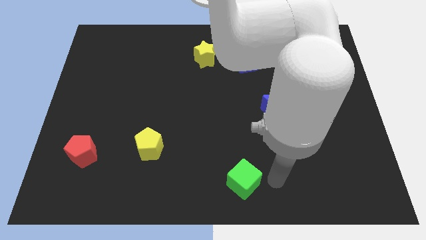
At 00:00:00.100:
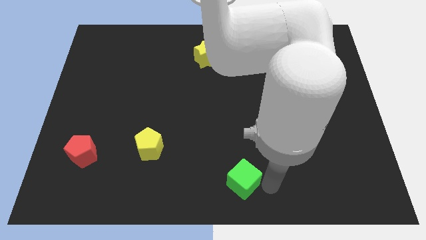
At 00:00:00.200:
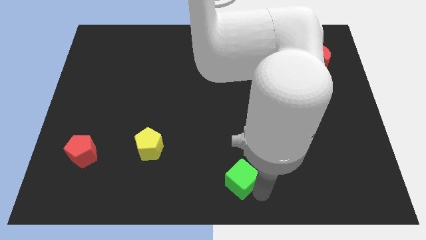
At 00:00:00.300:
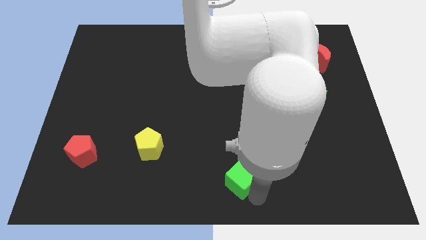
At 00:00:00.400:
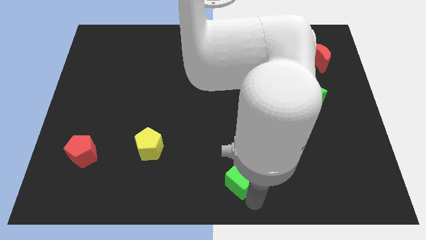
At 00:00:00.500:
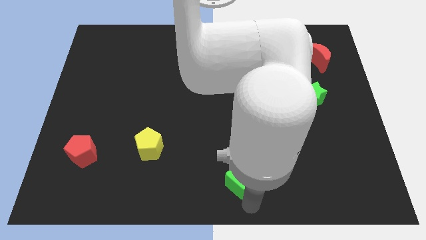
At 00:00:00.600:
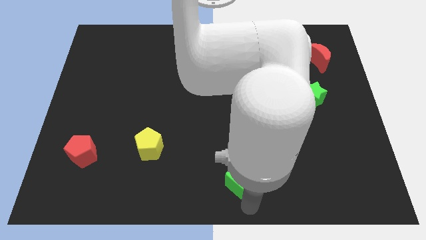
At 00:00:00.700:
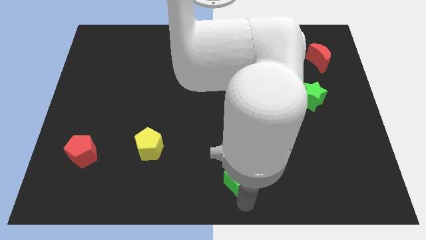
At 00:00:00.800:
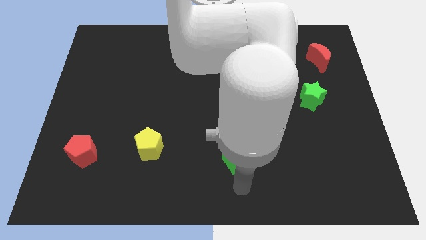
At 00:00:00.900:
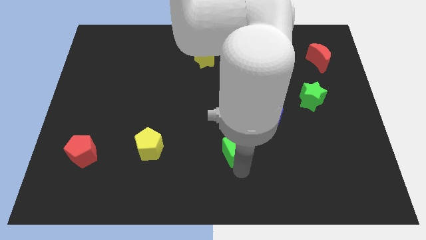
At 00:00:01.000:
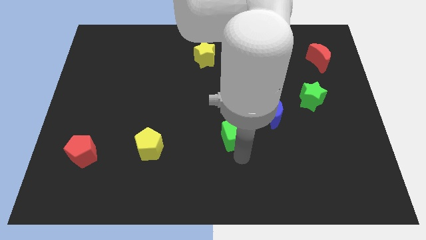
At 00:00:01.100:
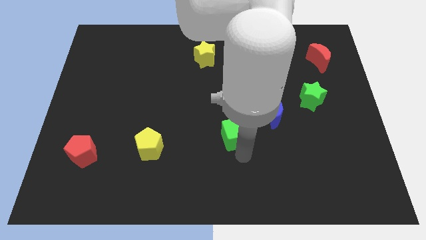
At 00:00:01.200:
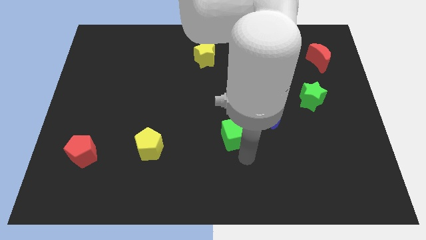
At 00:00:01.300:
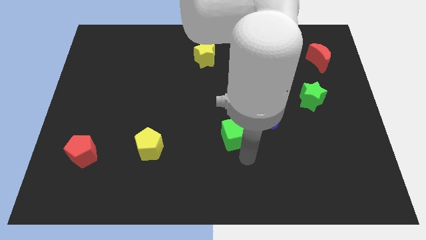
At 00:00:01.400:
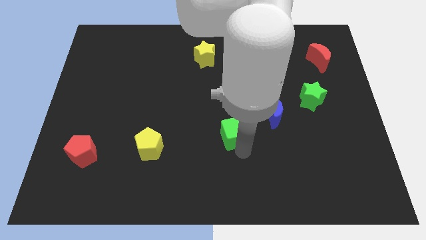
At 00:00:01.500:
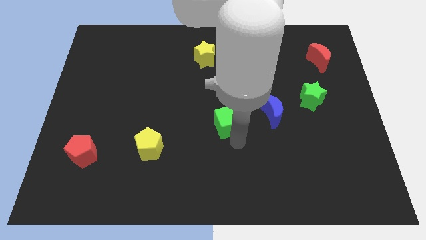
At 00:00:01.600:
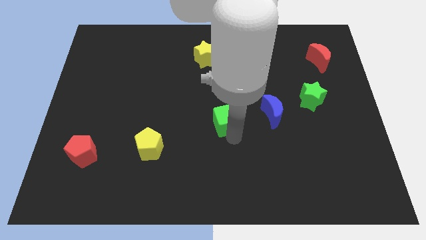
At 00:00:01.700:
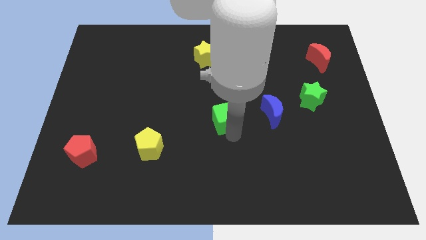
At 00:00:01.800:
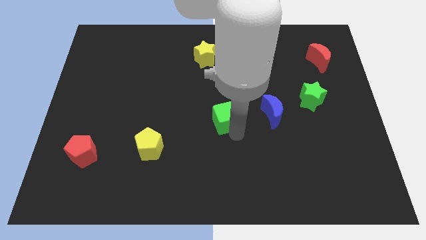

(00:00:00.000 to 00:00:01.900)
push the green cube to the left of the blue moon

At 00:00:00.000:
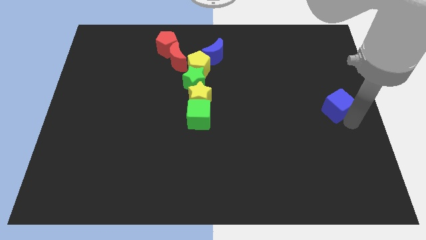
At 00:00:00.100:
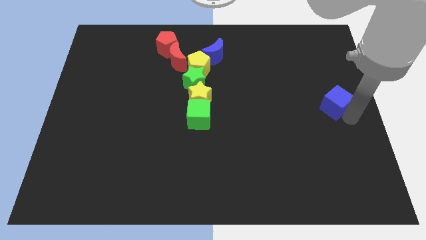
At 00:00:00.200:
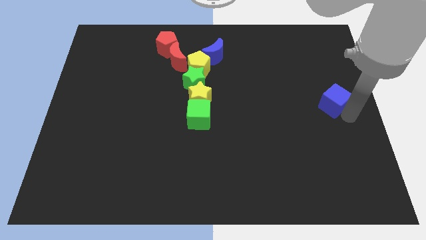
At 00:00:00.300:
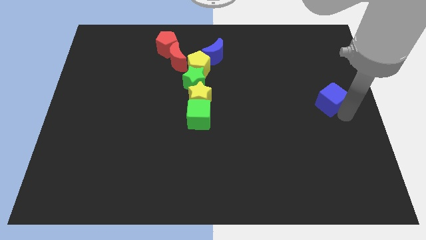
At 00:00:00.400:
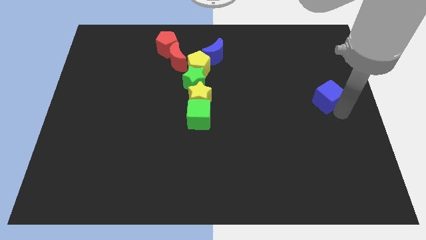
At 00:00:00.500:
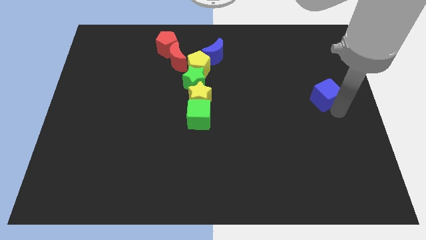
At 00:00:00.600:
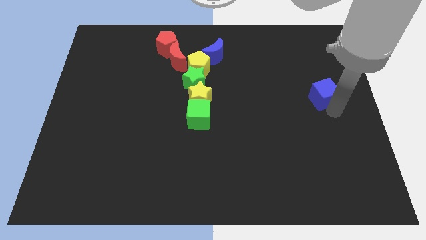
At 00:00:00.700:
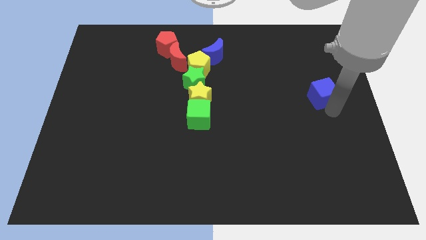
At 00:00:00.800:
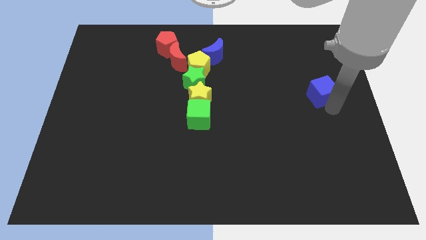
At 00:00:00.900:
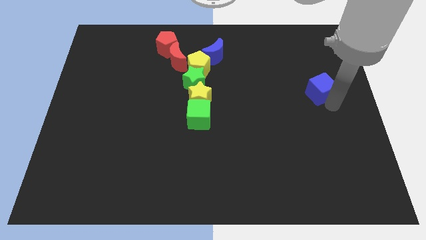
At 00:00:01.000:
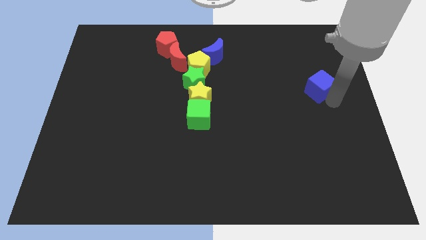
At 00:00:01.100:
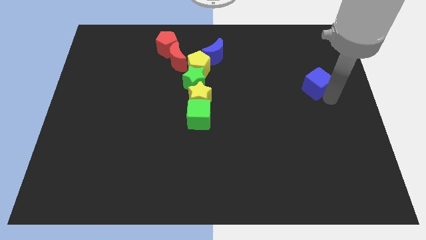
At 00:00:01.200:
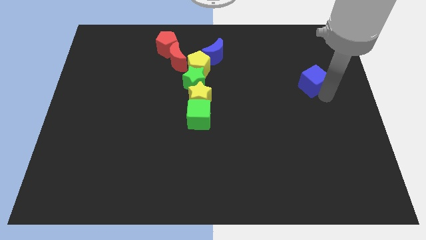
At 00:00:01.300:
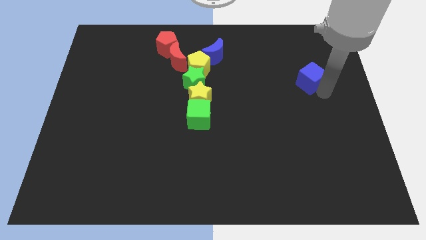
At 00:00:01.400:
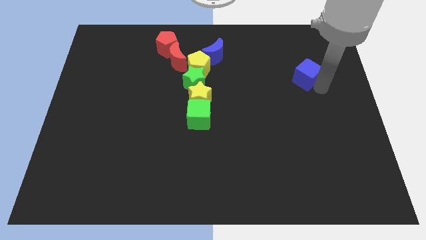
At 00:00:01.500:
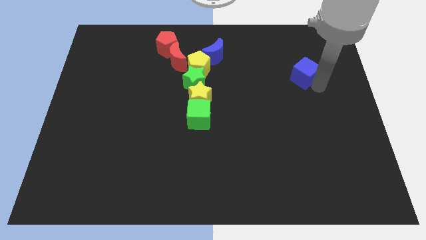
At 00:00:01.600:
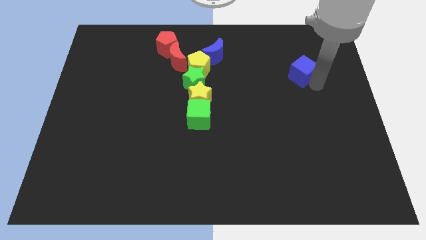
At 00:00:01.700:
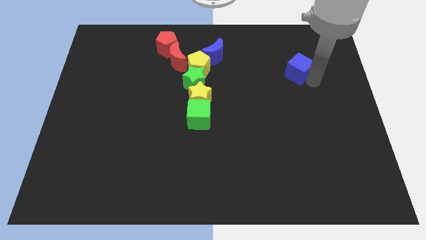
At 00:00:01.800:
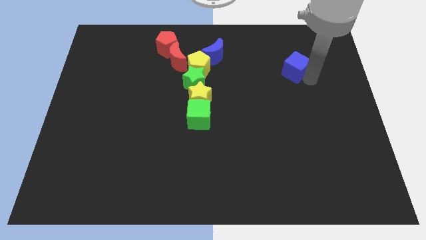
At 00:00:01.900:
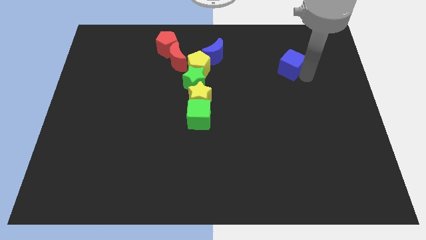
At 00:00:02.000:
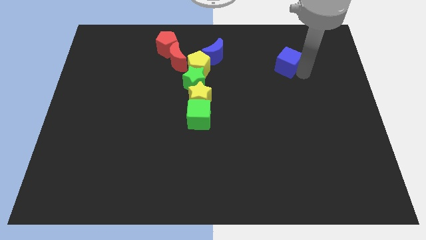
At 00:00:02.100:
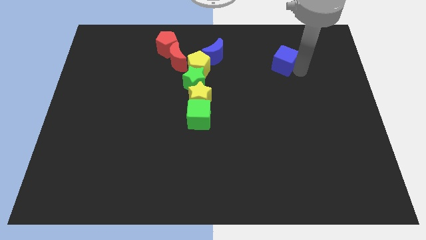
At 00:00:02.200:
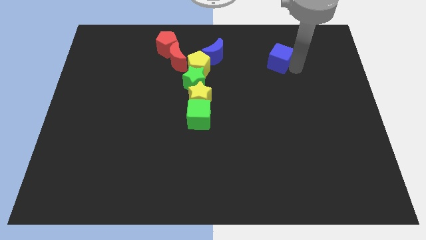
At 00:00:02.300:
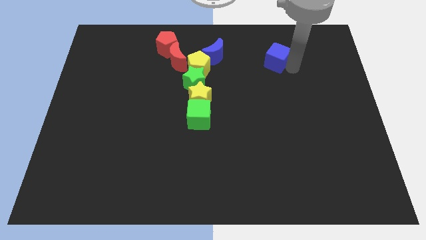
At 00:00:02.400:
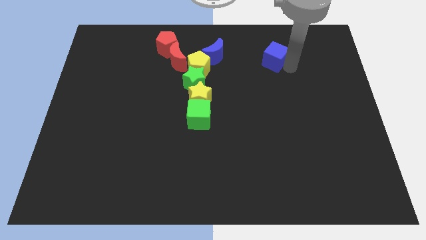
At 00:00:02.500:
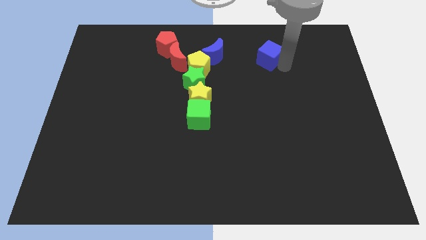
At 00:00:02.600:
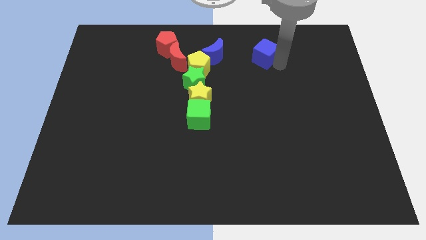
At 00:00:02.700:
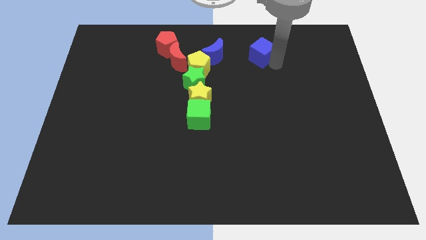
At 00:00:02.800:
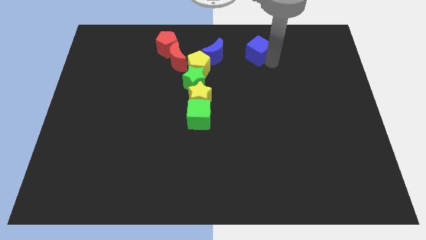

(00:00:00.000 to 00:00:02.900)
move the blue cube to the top right center of the board

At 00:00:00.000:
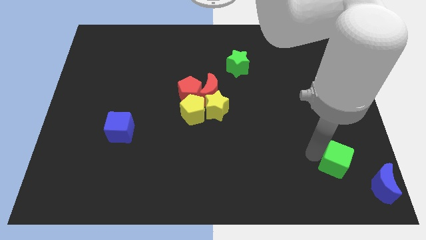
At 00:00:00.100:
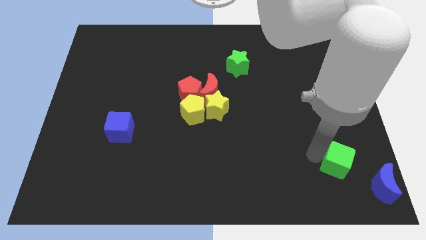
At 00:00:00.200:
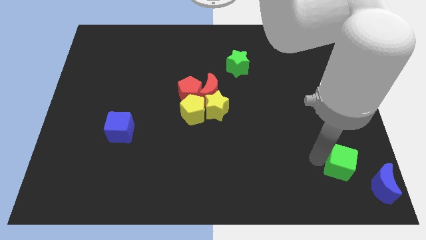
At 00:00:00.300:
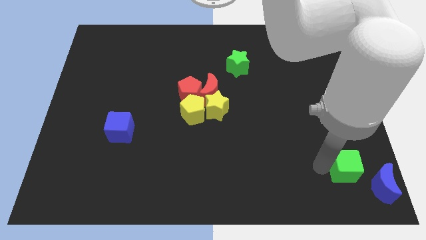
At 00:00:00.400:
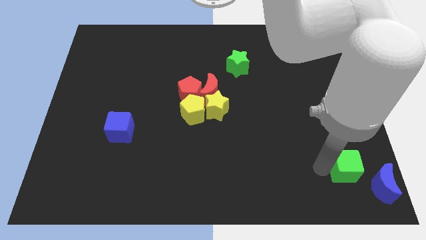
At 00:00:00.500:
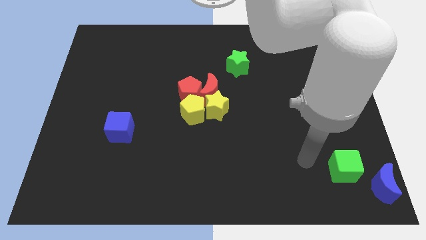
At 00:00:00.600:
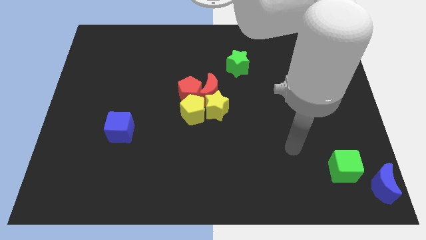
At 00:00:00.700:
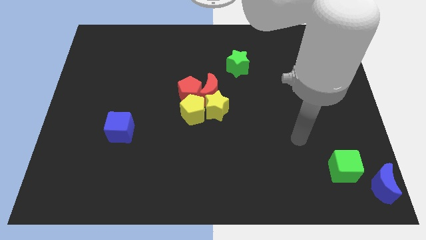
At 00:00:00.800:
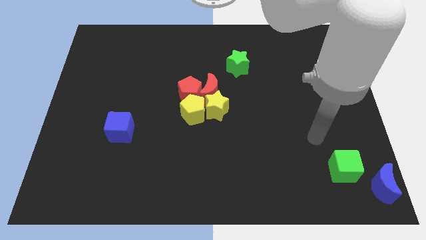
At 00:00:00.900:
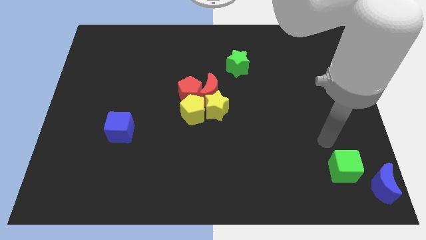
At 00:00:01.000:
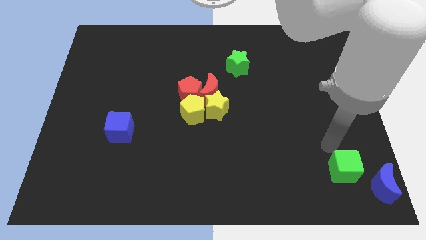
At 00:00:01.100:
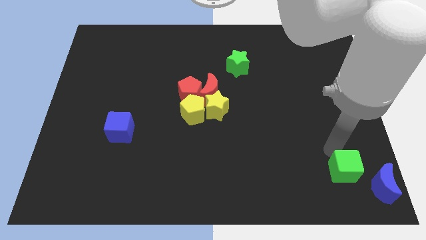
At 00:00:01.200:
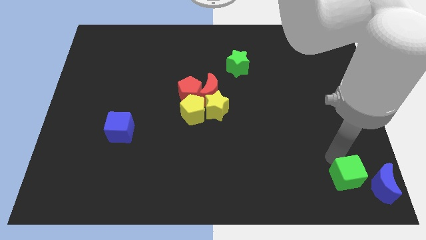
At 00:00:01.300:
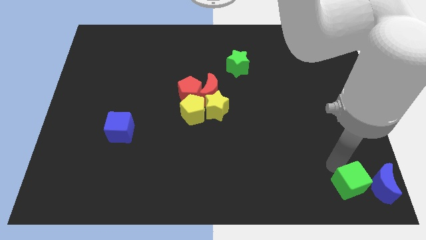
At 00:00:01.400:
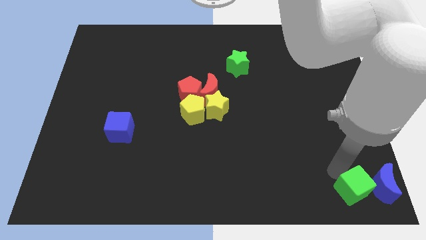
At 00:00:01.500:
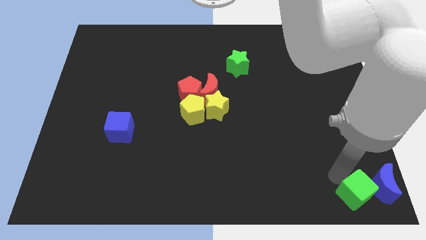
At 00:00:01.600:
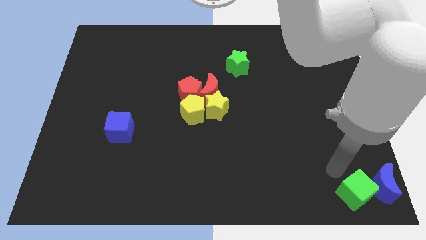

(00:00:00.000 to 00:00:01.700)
push green cube beside blue crescent

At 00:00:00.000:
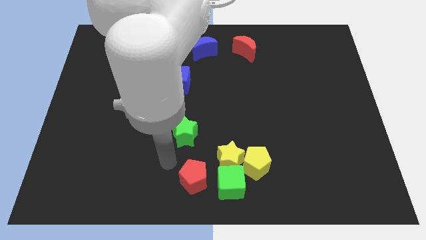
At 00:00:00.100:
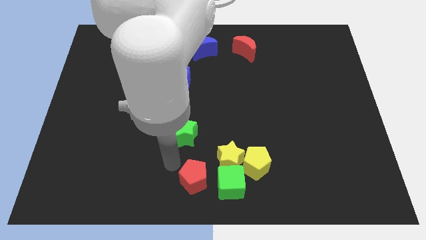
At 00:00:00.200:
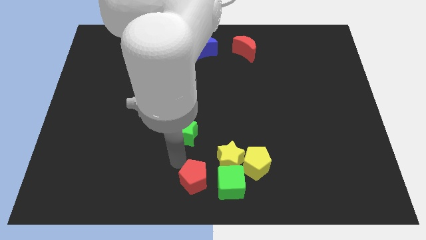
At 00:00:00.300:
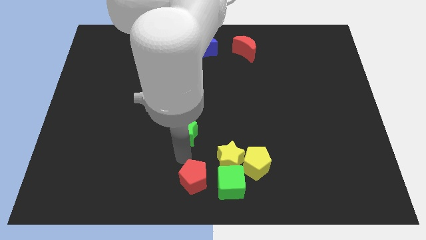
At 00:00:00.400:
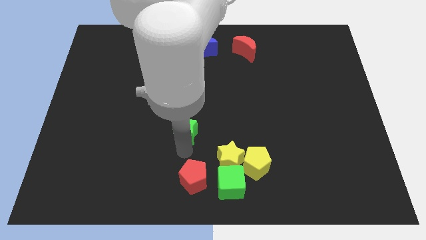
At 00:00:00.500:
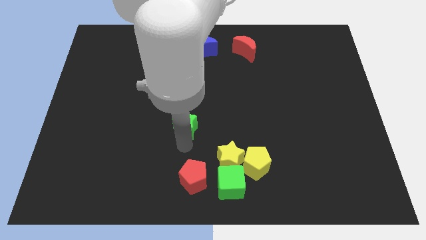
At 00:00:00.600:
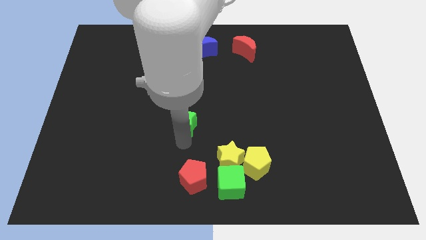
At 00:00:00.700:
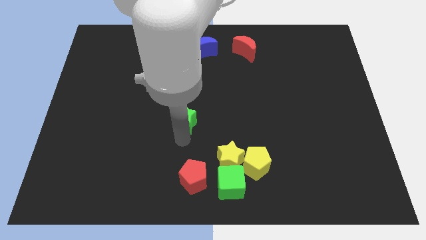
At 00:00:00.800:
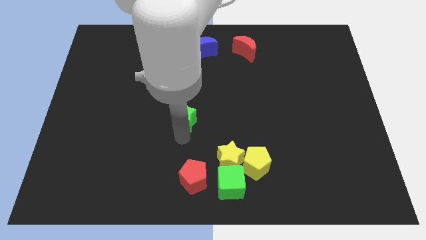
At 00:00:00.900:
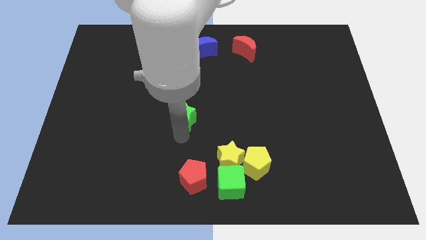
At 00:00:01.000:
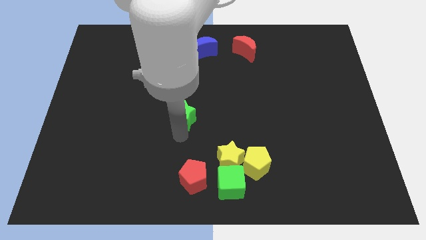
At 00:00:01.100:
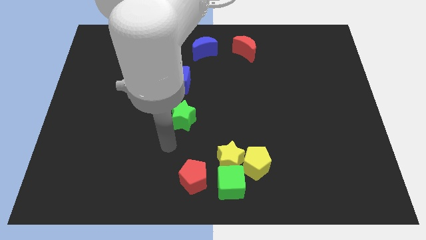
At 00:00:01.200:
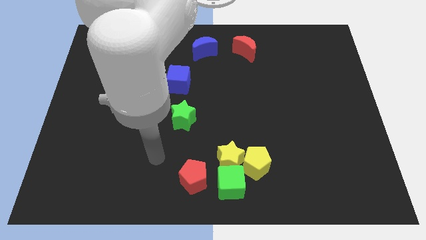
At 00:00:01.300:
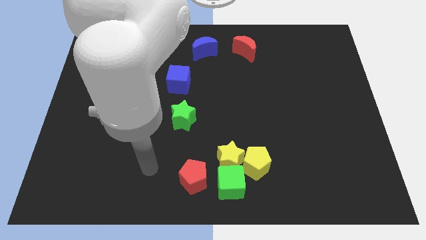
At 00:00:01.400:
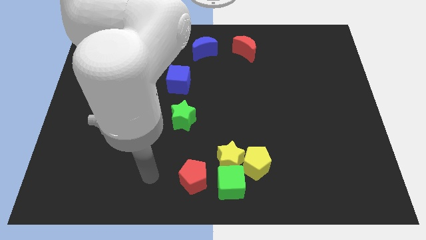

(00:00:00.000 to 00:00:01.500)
push the green star towards the center of the board

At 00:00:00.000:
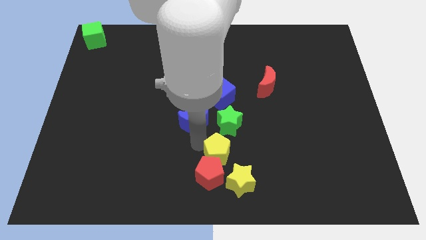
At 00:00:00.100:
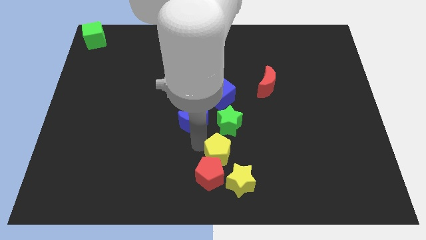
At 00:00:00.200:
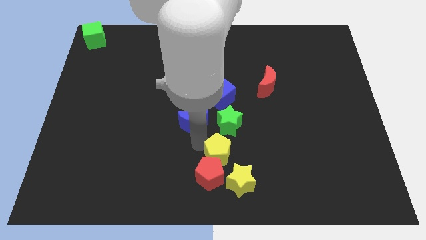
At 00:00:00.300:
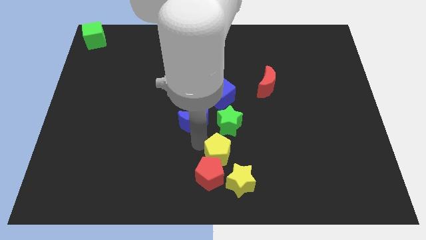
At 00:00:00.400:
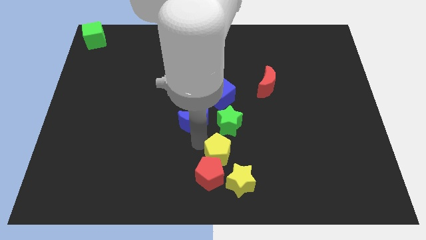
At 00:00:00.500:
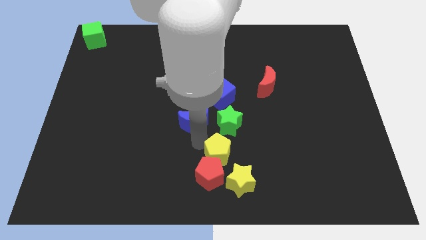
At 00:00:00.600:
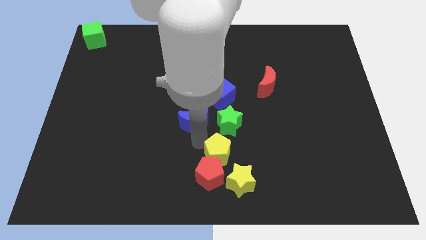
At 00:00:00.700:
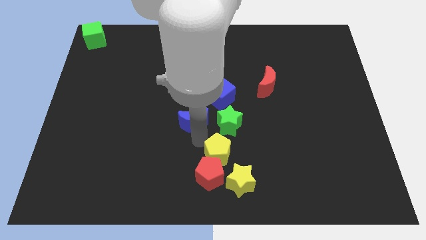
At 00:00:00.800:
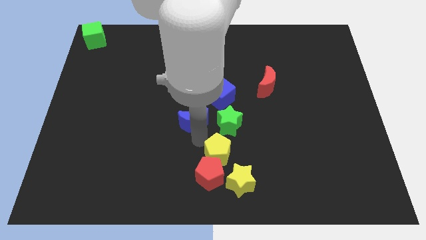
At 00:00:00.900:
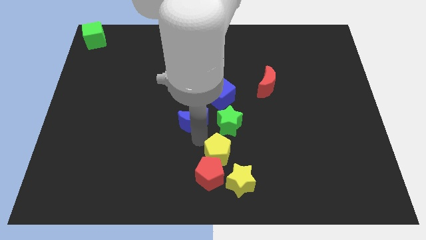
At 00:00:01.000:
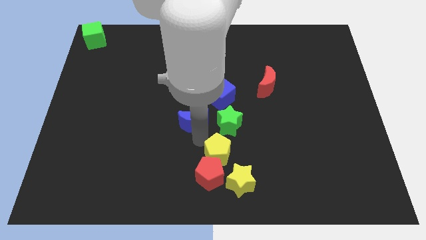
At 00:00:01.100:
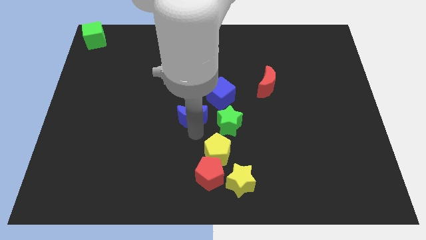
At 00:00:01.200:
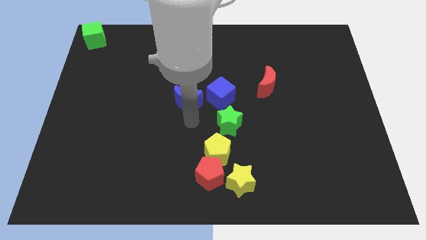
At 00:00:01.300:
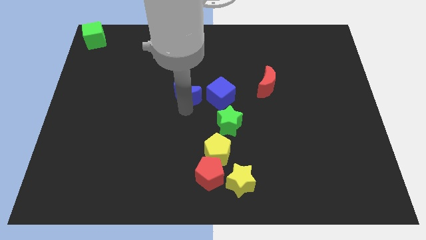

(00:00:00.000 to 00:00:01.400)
place blue moon parallel left to blue cube
